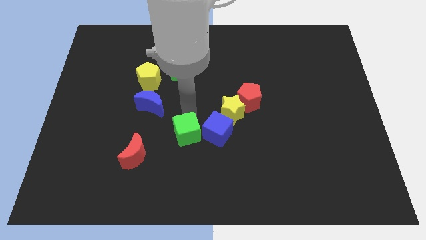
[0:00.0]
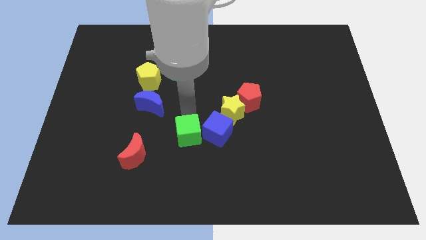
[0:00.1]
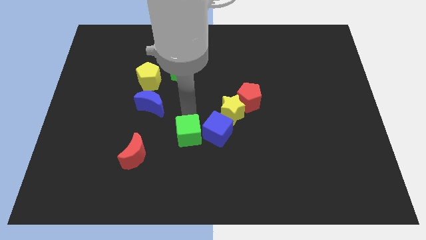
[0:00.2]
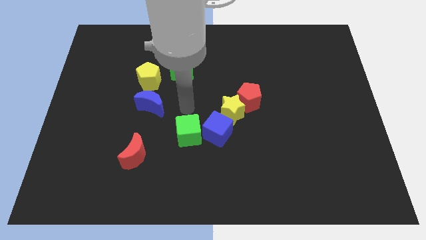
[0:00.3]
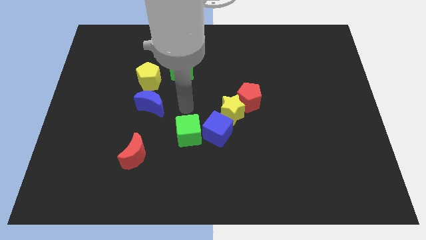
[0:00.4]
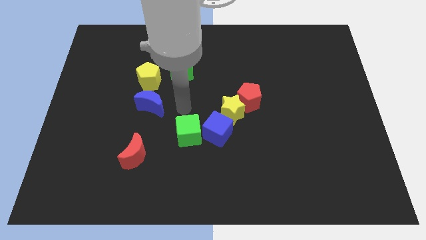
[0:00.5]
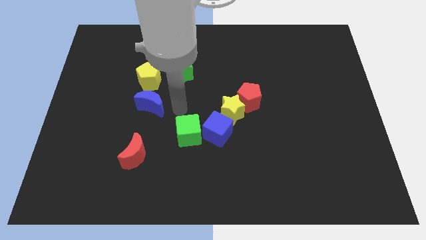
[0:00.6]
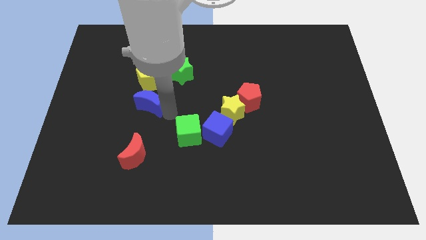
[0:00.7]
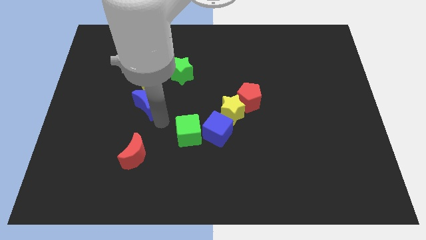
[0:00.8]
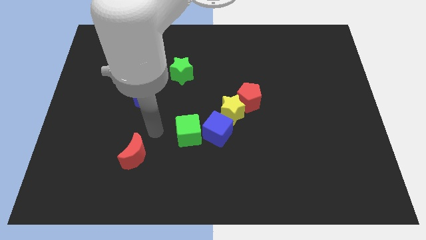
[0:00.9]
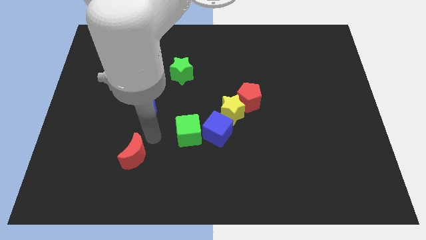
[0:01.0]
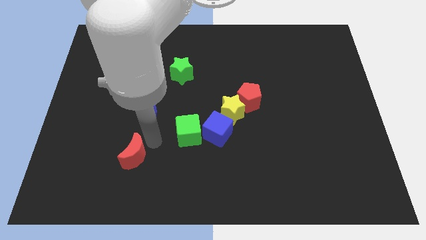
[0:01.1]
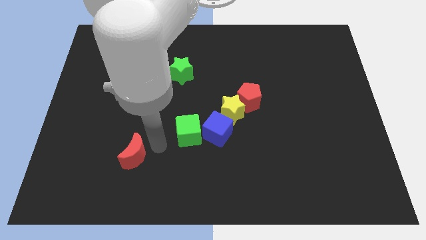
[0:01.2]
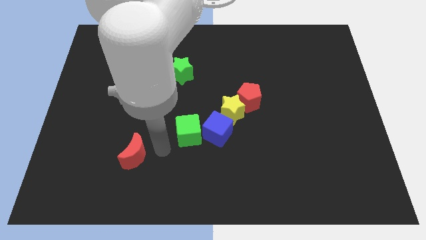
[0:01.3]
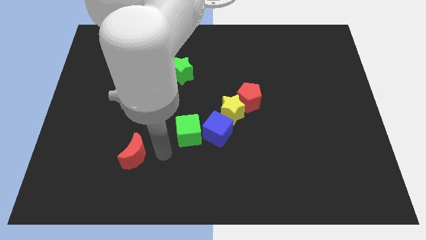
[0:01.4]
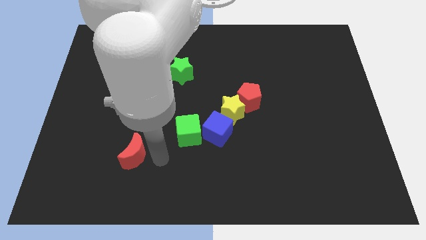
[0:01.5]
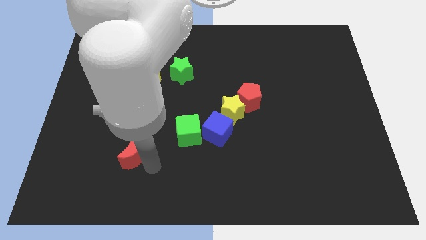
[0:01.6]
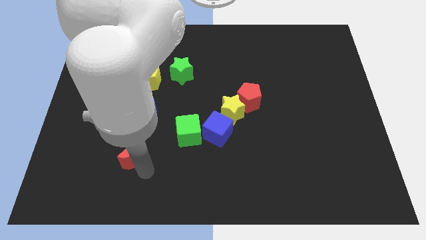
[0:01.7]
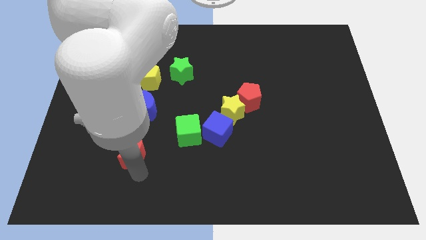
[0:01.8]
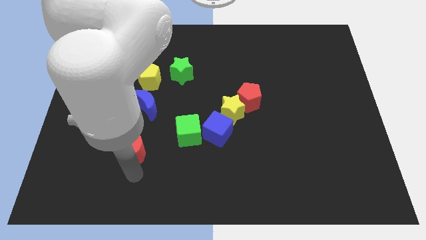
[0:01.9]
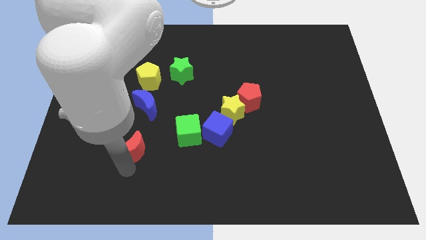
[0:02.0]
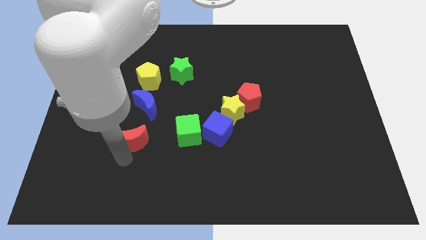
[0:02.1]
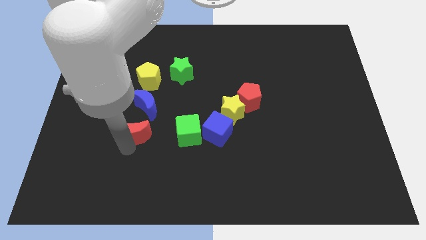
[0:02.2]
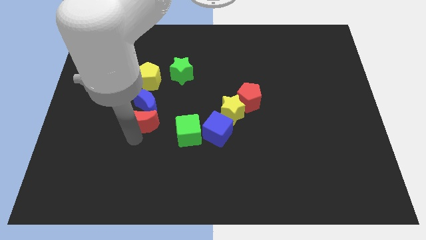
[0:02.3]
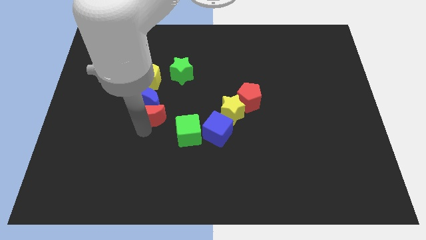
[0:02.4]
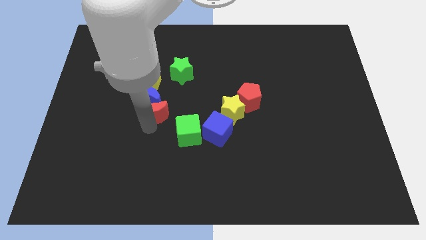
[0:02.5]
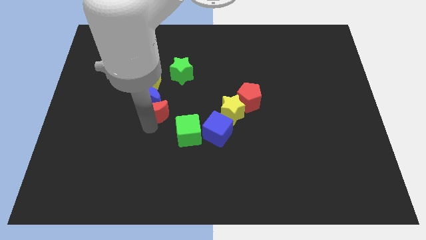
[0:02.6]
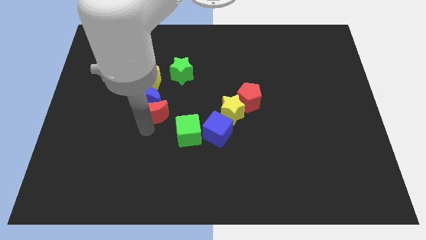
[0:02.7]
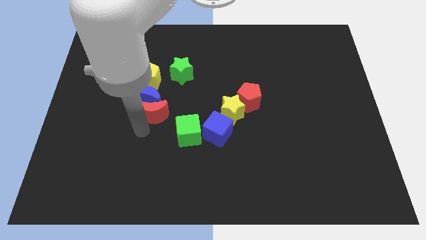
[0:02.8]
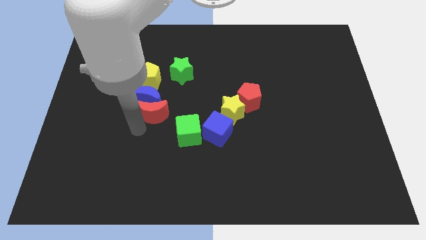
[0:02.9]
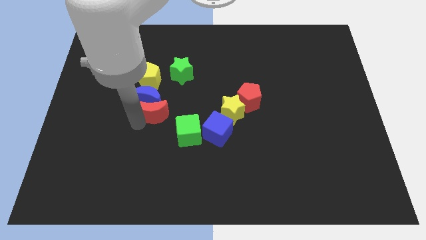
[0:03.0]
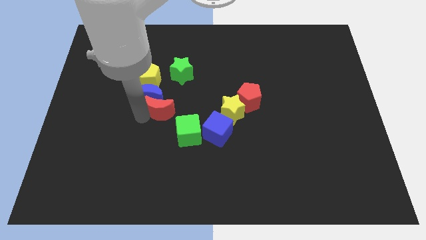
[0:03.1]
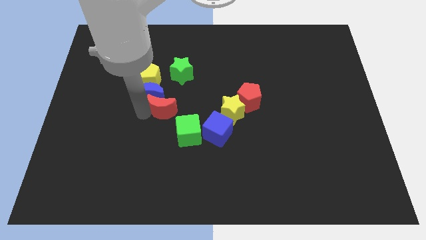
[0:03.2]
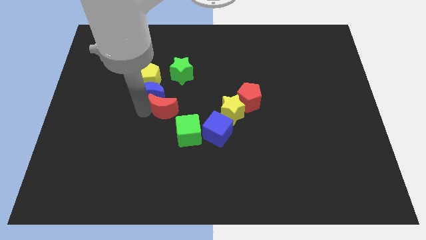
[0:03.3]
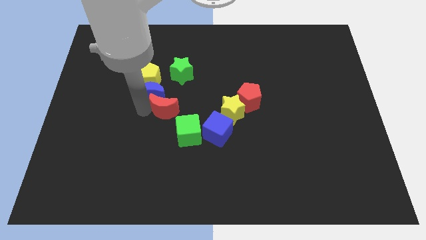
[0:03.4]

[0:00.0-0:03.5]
push the red moon into the blue moon

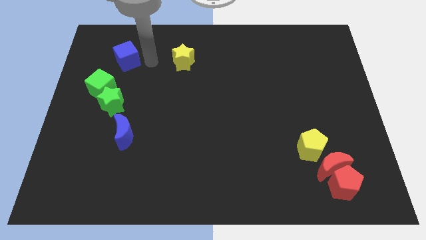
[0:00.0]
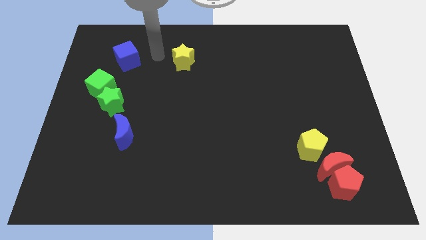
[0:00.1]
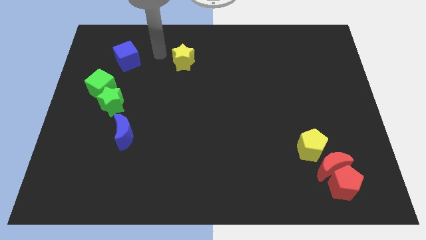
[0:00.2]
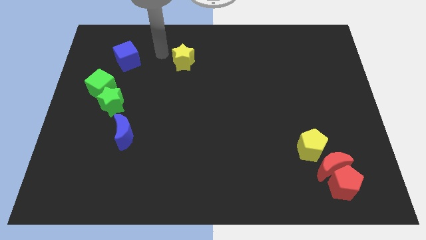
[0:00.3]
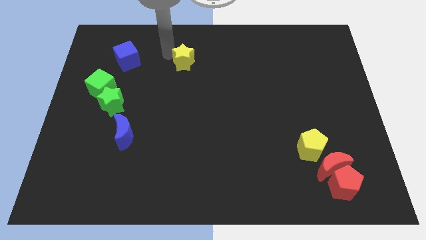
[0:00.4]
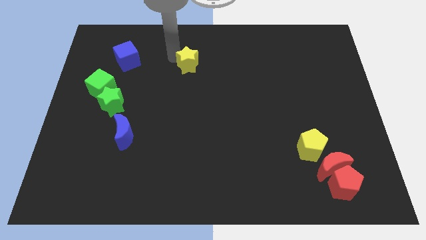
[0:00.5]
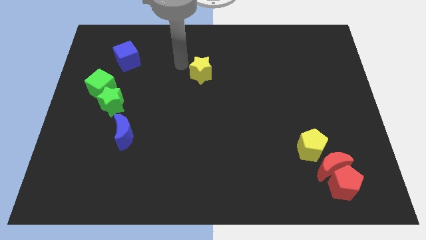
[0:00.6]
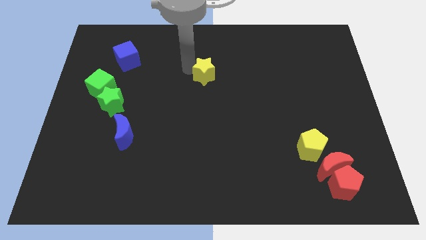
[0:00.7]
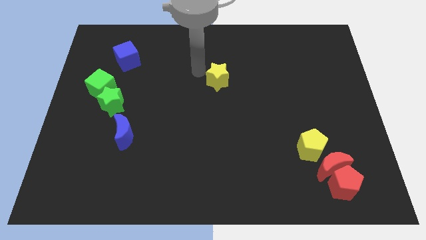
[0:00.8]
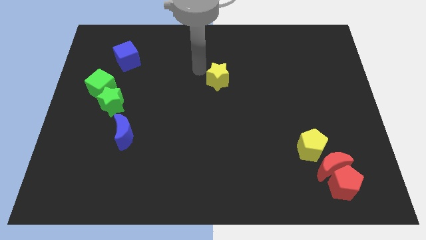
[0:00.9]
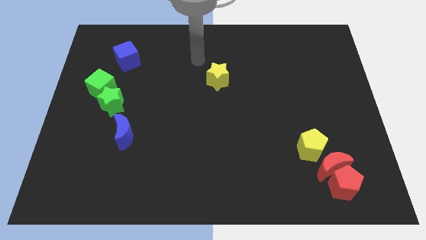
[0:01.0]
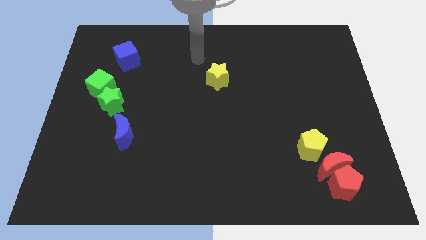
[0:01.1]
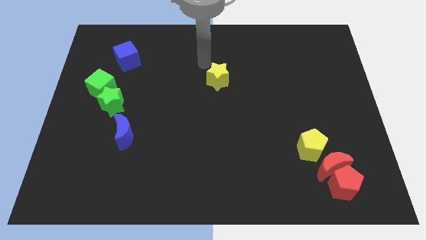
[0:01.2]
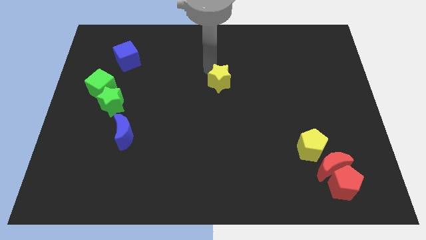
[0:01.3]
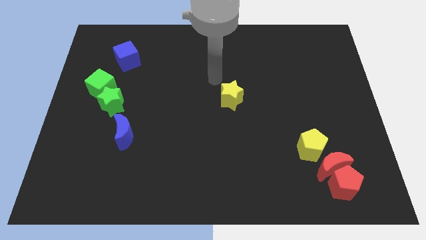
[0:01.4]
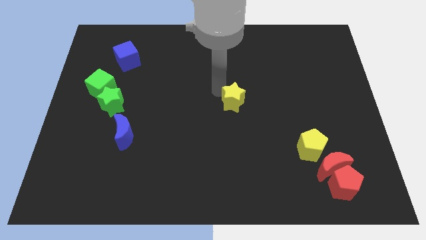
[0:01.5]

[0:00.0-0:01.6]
push the yellow star parallel to the green star

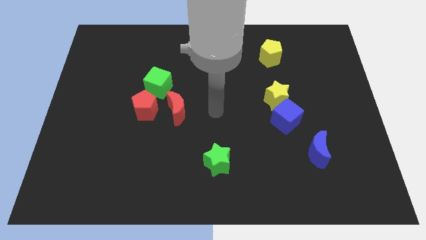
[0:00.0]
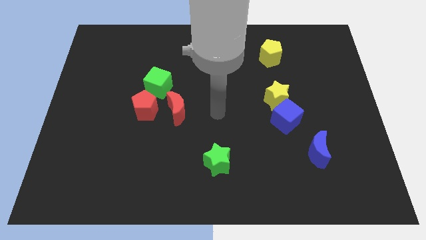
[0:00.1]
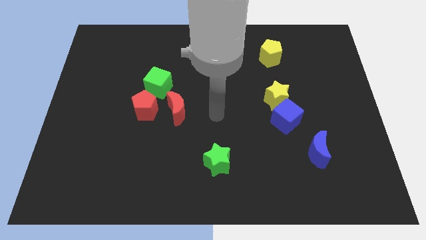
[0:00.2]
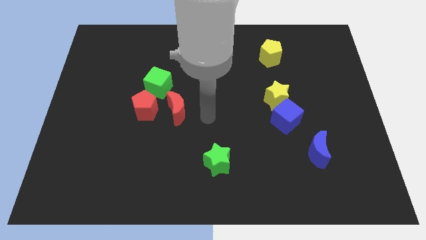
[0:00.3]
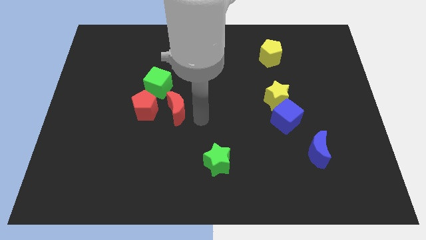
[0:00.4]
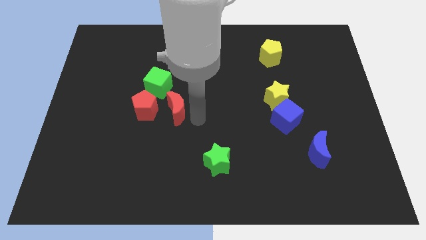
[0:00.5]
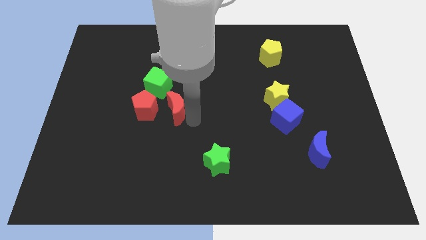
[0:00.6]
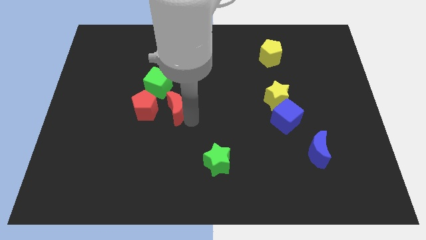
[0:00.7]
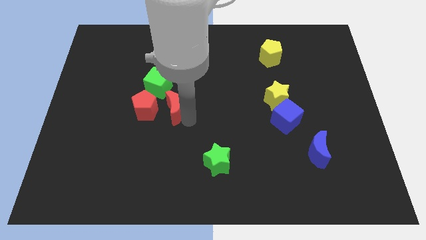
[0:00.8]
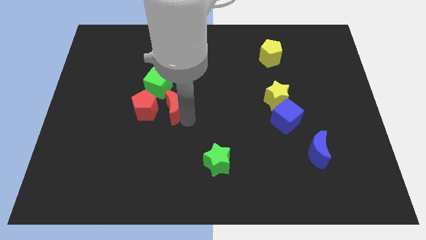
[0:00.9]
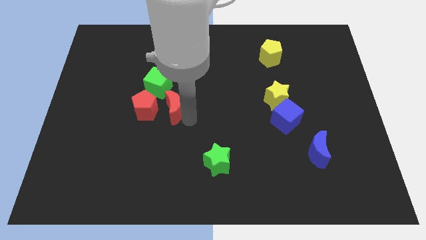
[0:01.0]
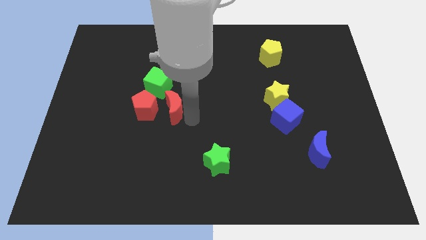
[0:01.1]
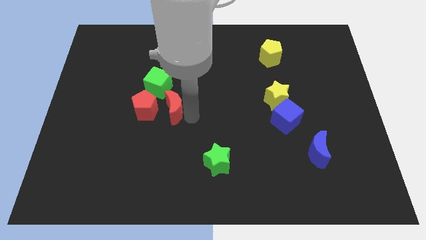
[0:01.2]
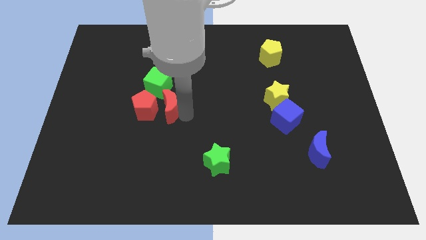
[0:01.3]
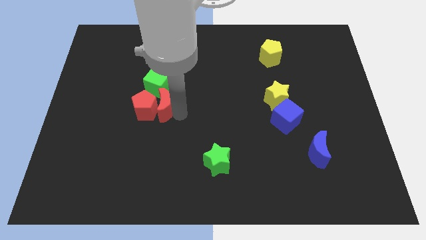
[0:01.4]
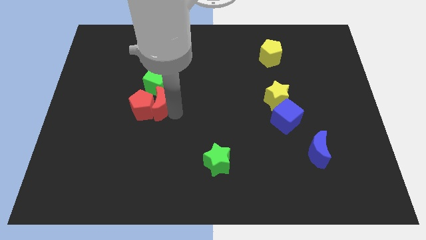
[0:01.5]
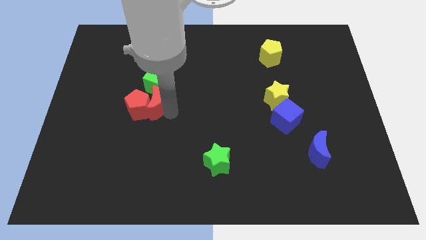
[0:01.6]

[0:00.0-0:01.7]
drag the red moon into the right side of the red pentagon

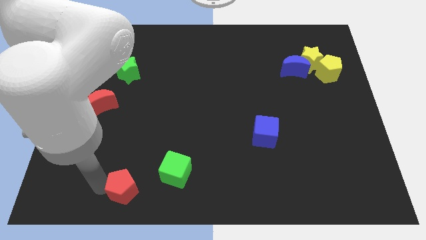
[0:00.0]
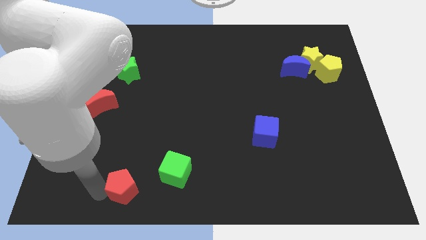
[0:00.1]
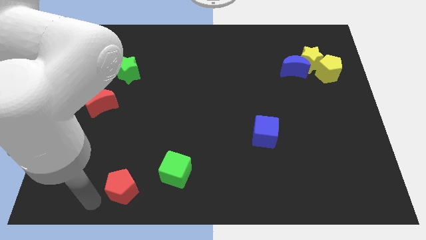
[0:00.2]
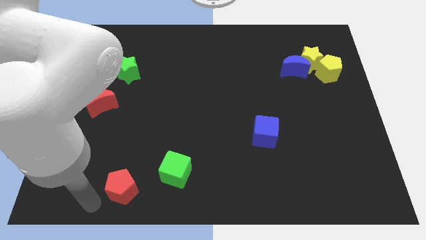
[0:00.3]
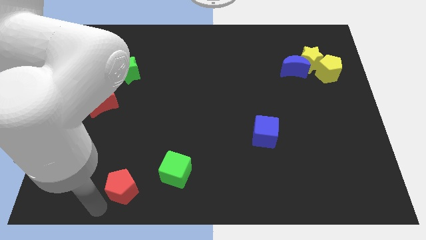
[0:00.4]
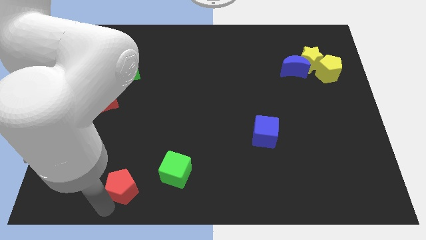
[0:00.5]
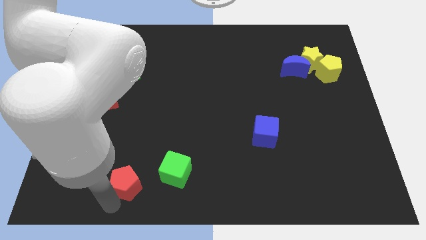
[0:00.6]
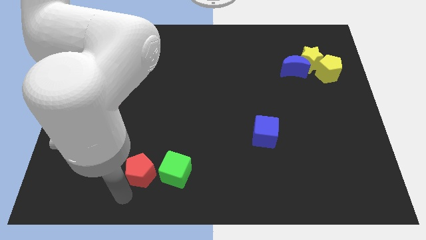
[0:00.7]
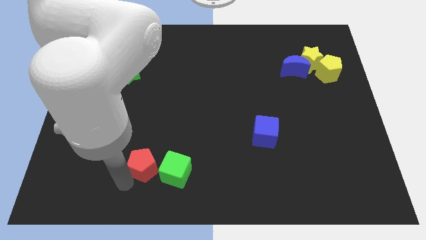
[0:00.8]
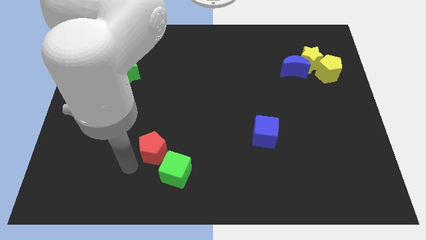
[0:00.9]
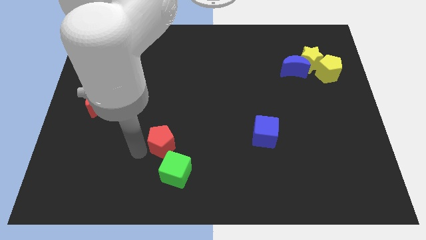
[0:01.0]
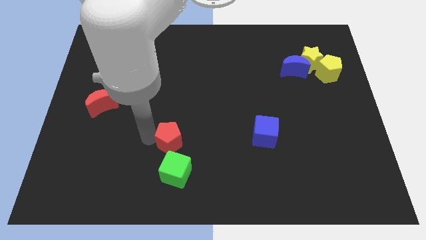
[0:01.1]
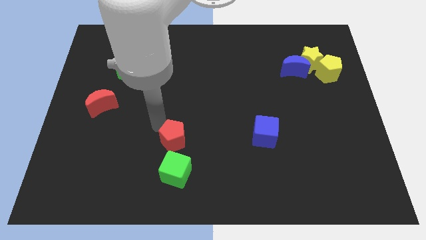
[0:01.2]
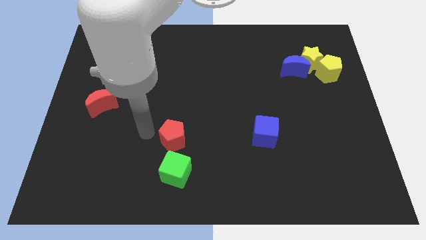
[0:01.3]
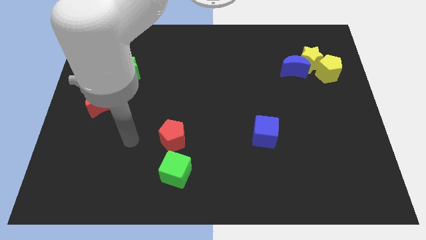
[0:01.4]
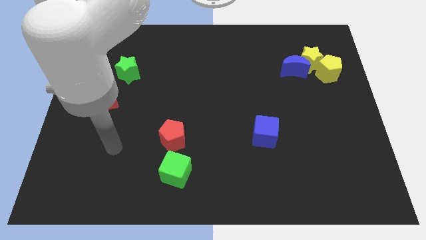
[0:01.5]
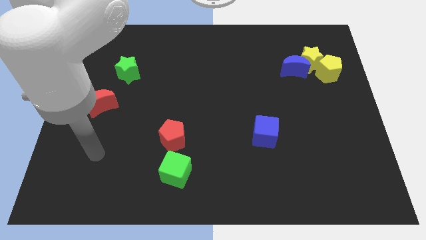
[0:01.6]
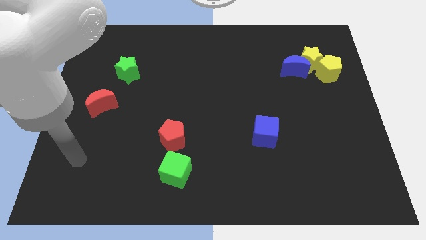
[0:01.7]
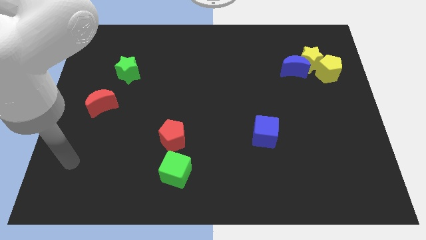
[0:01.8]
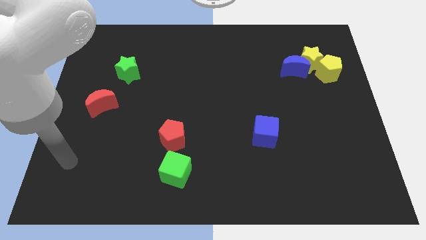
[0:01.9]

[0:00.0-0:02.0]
place the red pentagon above the green cube

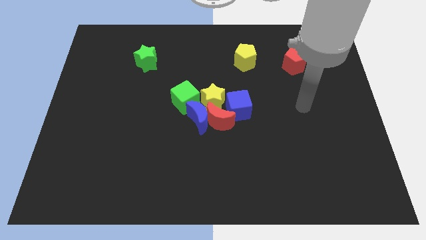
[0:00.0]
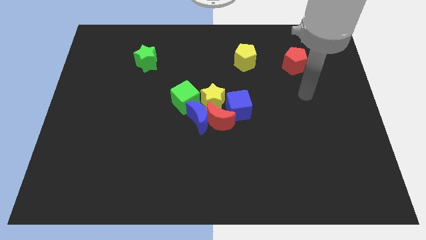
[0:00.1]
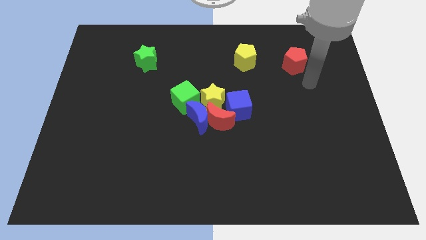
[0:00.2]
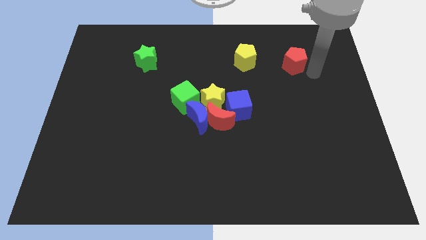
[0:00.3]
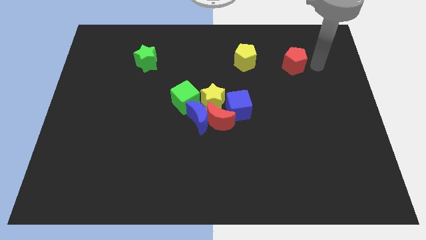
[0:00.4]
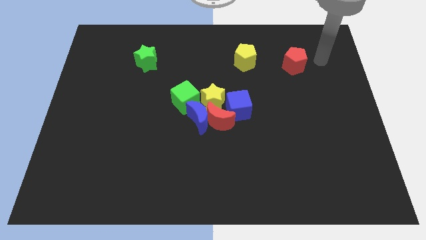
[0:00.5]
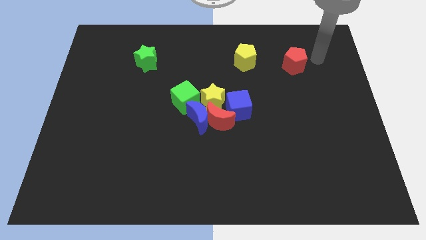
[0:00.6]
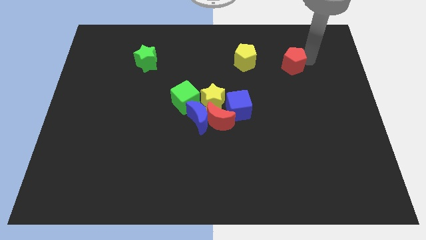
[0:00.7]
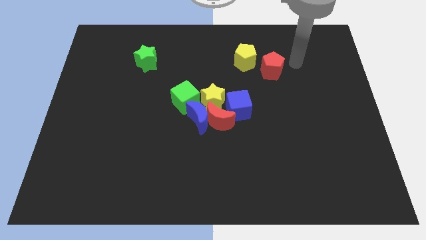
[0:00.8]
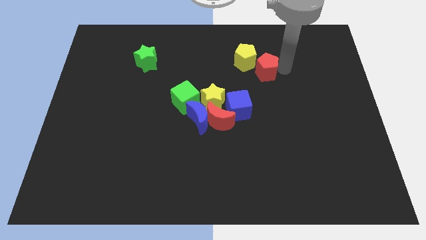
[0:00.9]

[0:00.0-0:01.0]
place the red pentagon diagonally top left to the yellow pentagon
